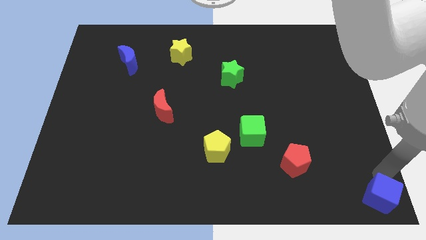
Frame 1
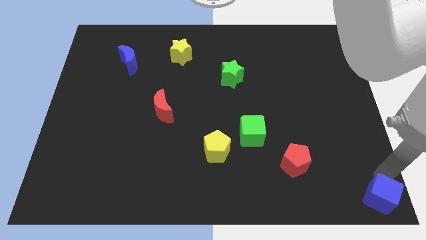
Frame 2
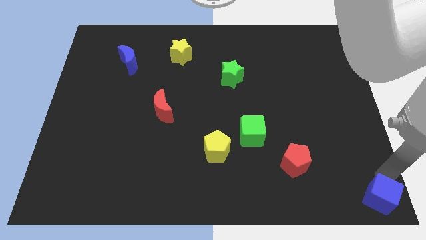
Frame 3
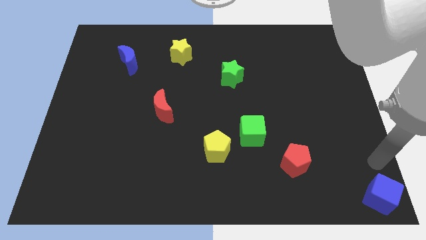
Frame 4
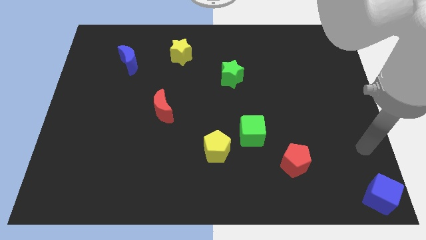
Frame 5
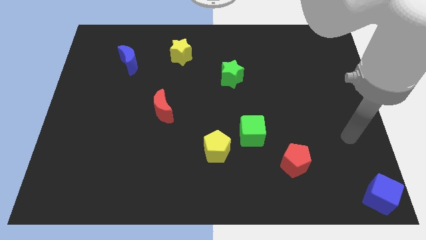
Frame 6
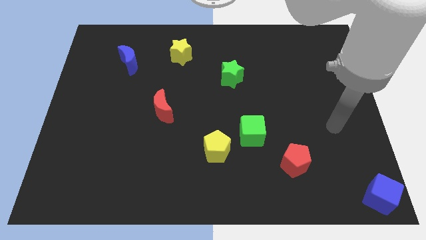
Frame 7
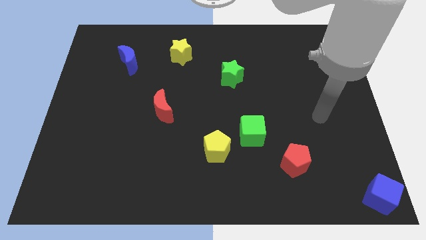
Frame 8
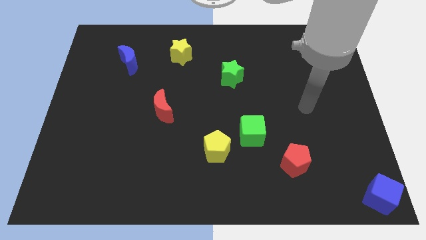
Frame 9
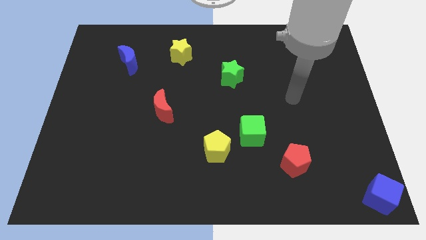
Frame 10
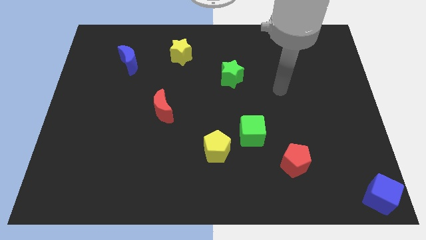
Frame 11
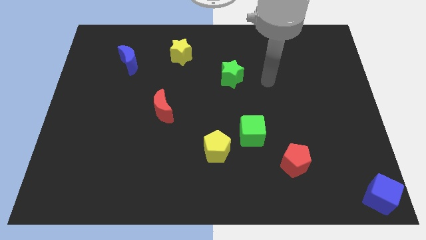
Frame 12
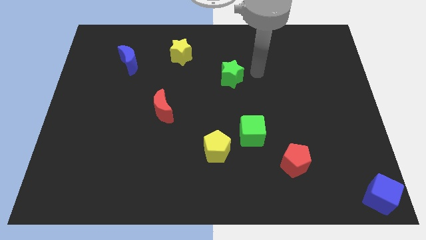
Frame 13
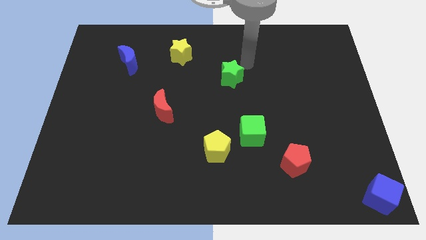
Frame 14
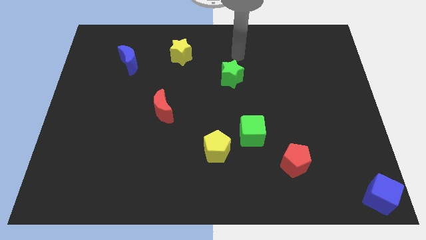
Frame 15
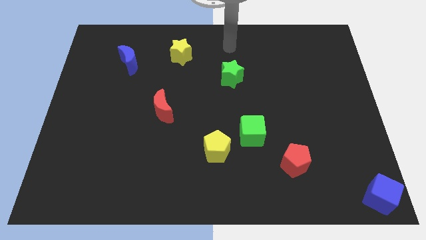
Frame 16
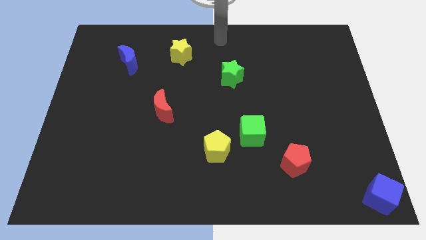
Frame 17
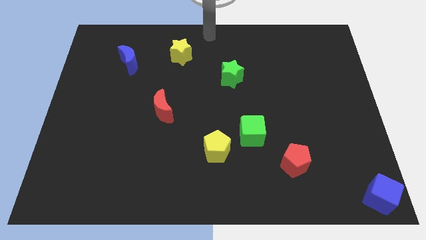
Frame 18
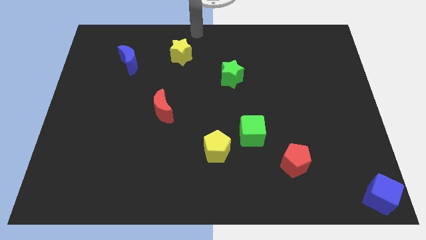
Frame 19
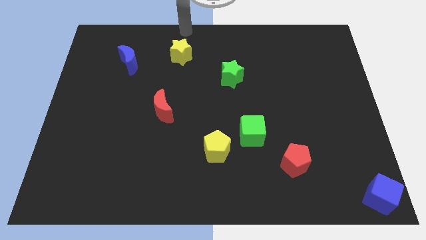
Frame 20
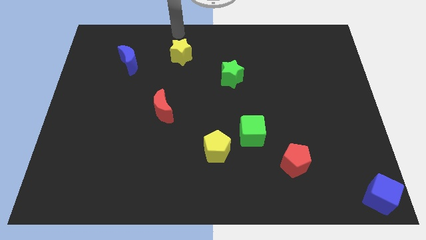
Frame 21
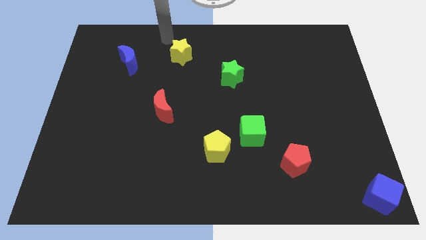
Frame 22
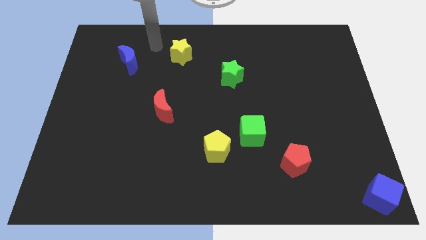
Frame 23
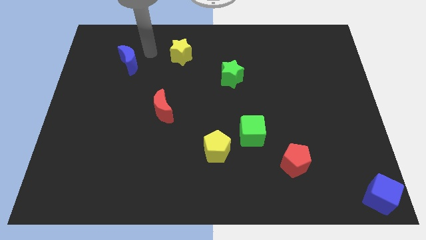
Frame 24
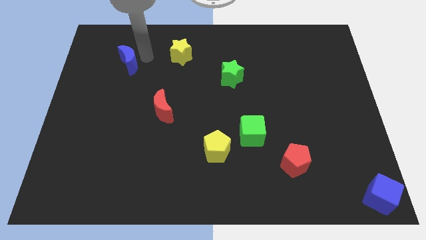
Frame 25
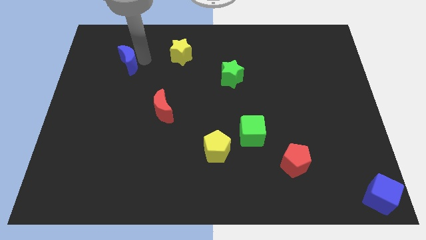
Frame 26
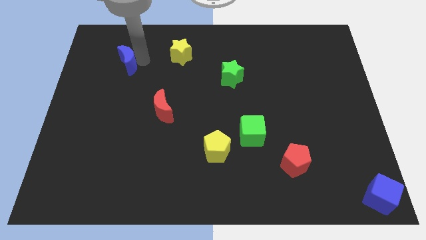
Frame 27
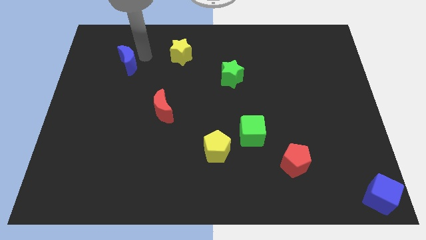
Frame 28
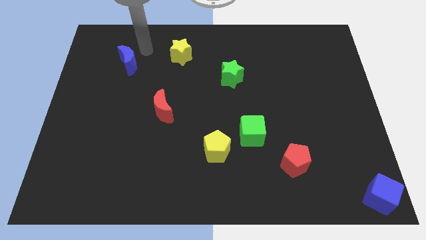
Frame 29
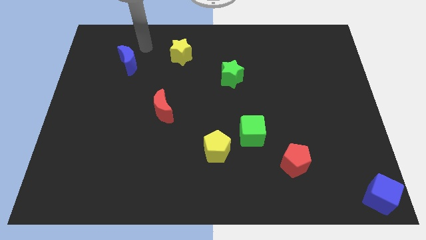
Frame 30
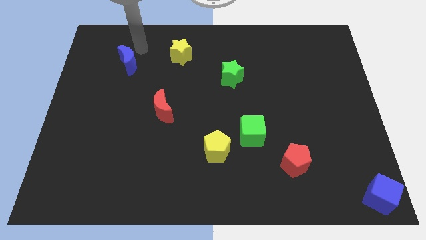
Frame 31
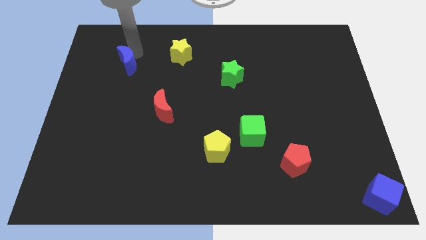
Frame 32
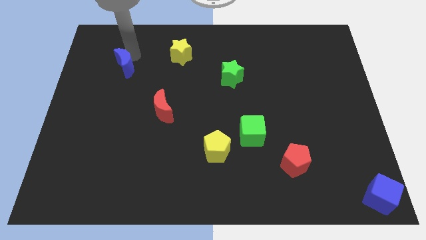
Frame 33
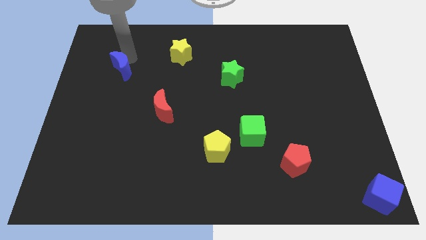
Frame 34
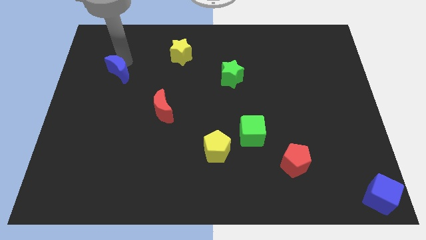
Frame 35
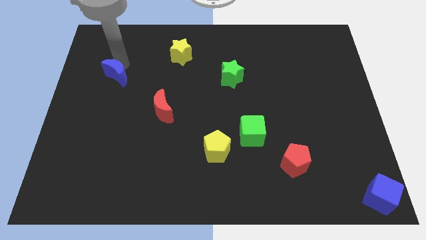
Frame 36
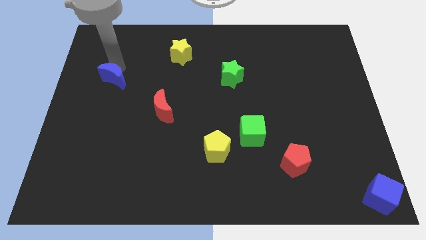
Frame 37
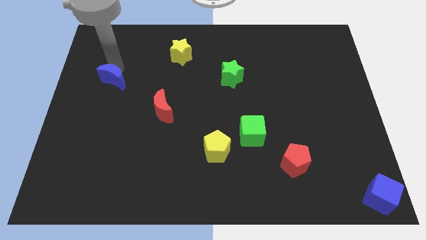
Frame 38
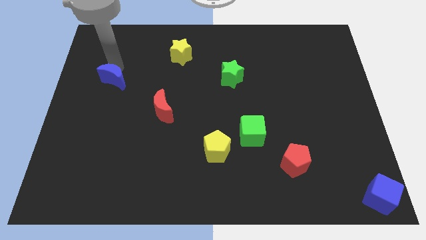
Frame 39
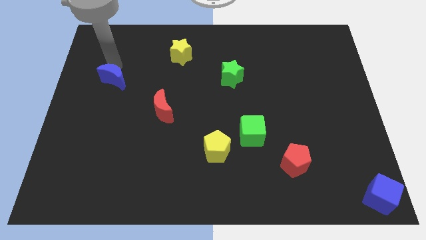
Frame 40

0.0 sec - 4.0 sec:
move the blue crescent to the bottom side

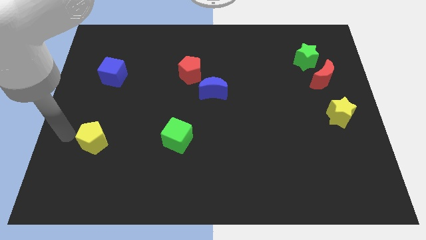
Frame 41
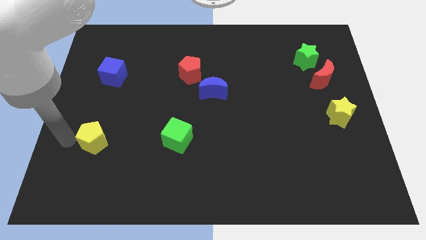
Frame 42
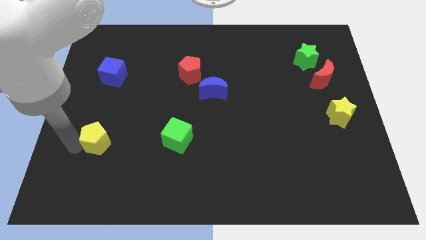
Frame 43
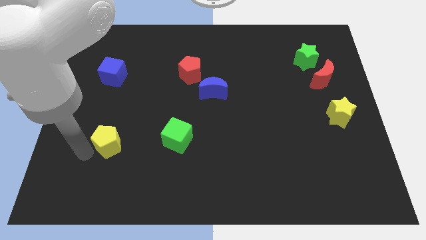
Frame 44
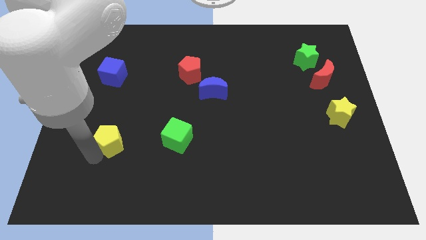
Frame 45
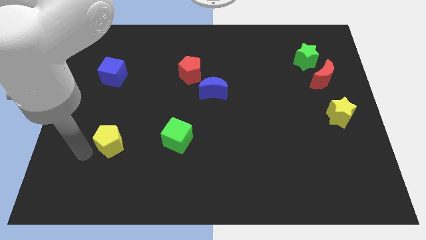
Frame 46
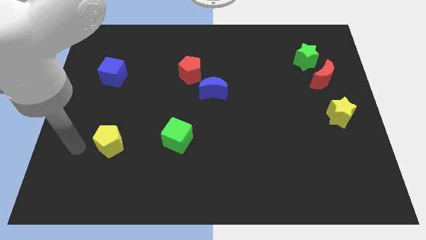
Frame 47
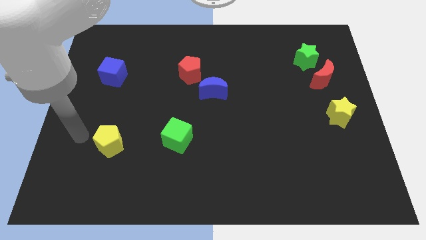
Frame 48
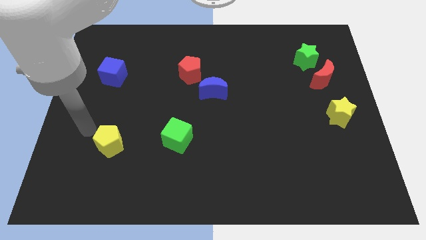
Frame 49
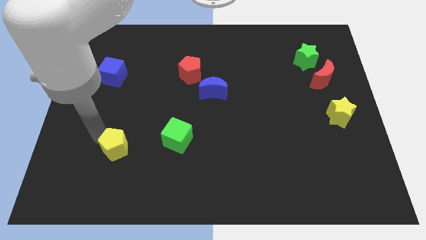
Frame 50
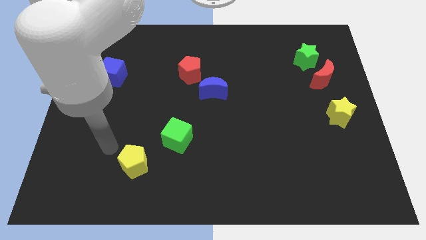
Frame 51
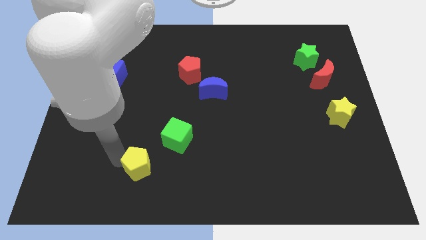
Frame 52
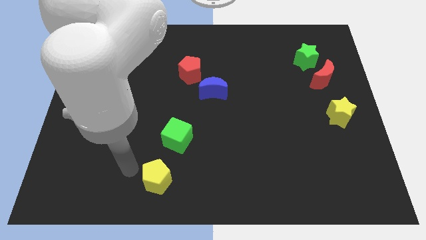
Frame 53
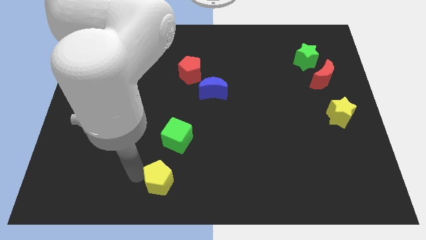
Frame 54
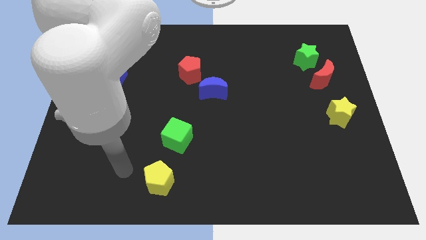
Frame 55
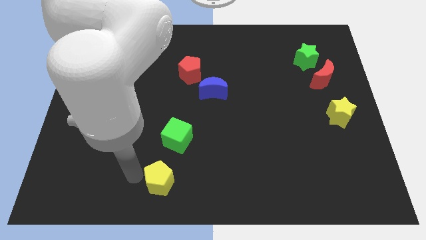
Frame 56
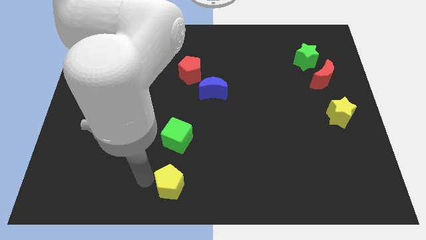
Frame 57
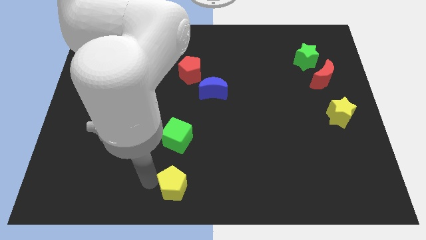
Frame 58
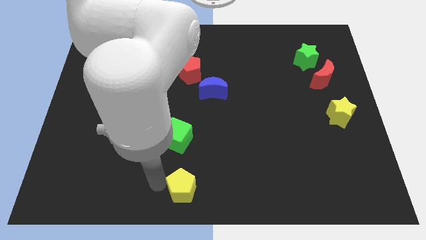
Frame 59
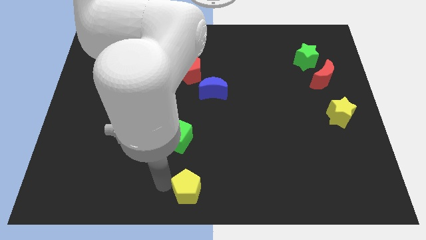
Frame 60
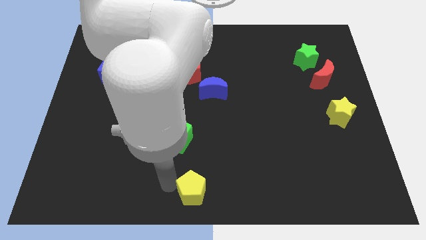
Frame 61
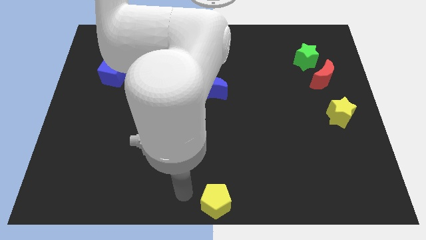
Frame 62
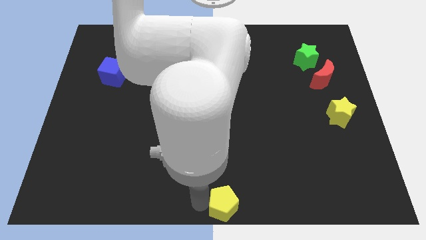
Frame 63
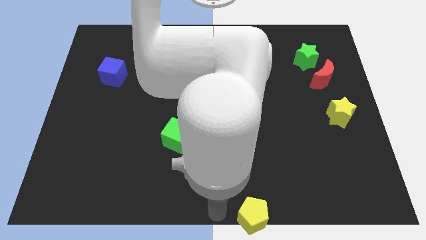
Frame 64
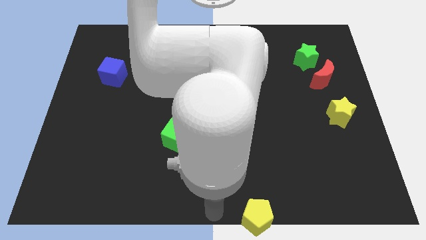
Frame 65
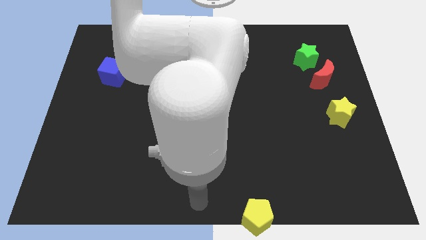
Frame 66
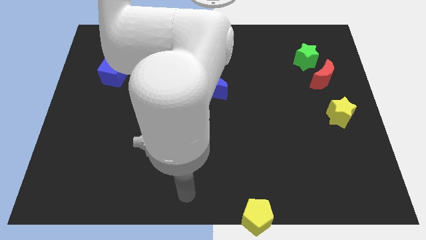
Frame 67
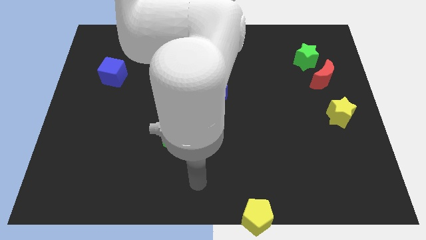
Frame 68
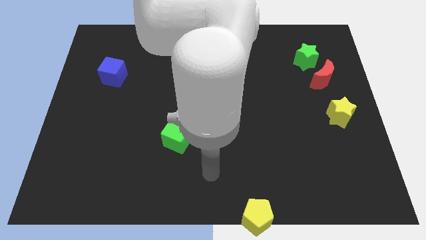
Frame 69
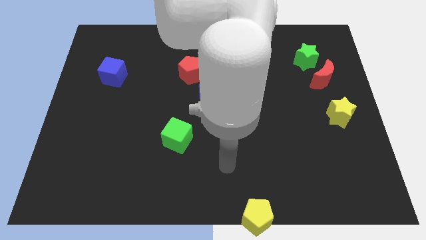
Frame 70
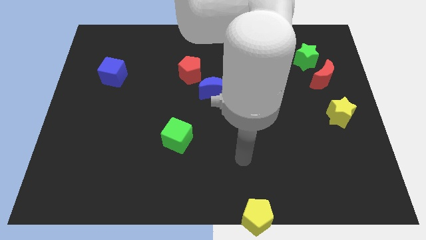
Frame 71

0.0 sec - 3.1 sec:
slide yellow pentagon towards bottom center

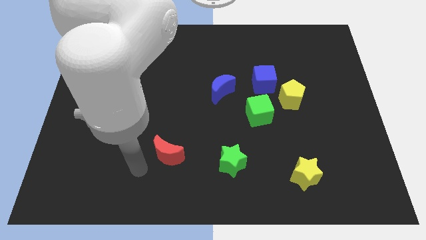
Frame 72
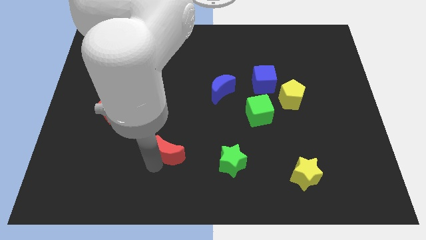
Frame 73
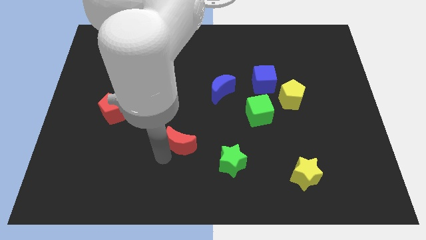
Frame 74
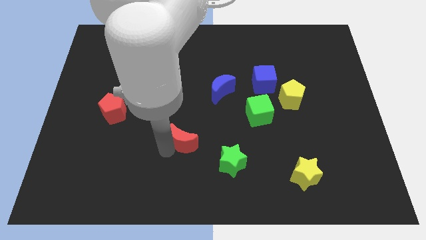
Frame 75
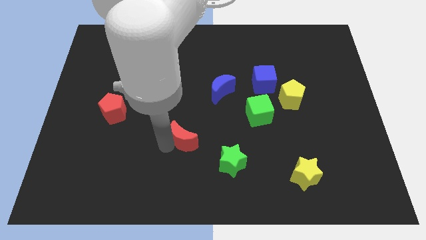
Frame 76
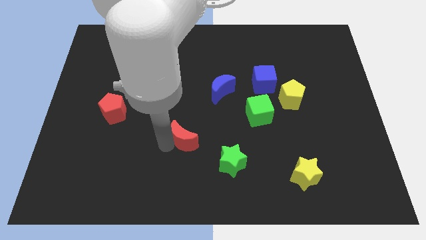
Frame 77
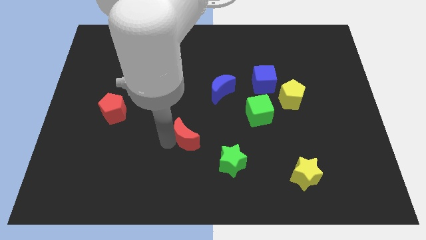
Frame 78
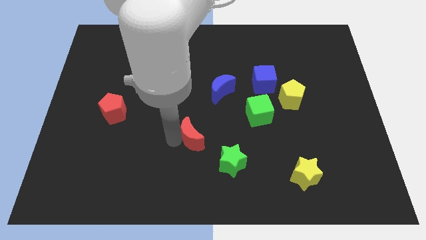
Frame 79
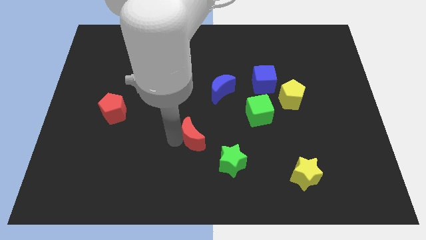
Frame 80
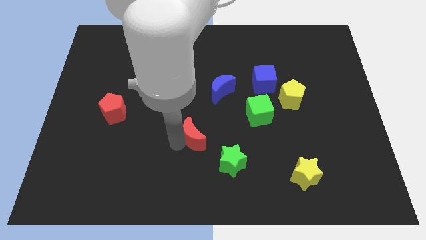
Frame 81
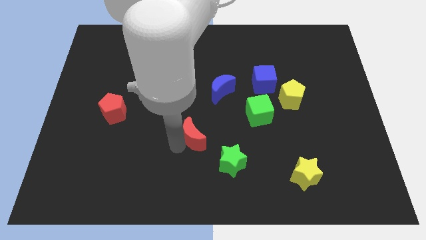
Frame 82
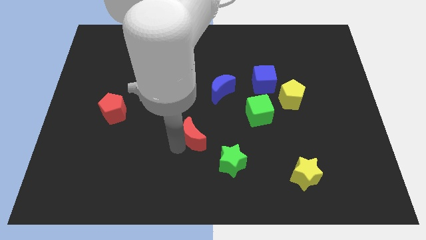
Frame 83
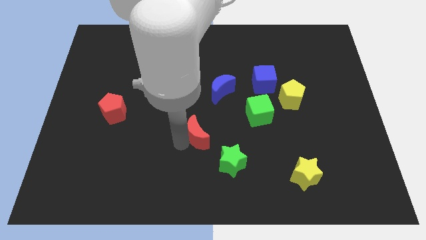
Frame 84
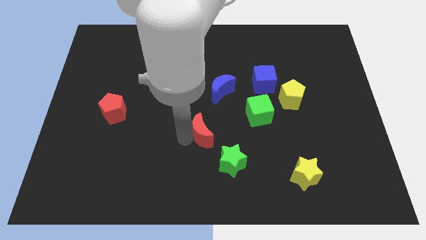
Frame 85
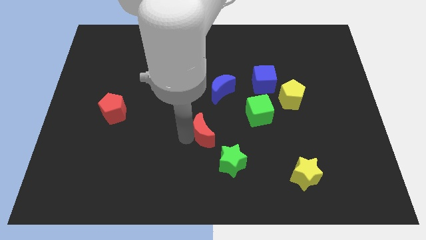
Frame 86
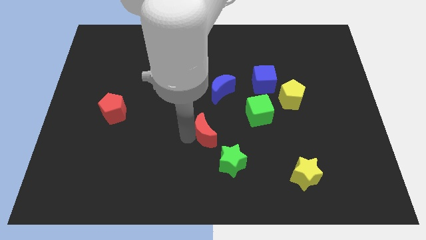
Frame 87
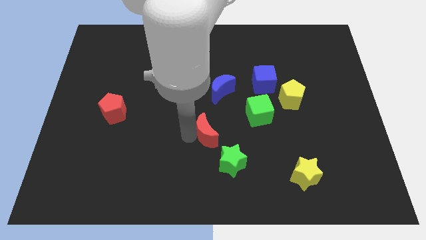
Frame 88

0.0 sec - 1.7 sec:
drag the red moon diagonally top left to the green star
